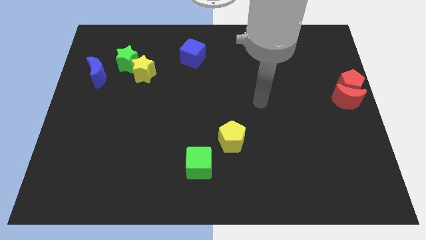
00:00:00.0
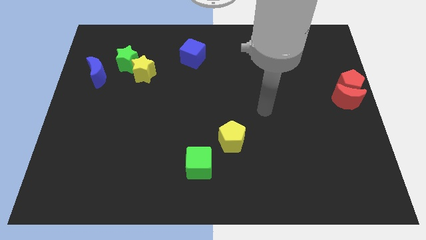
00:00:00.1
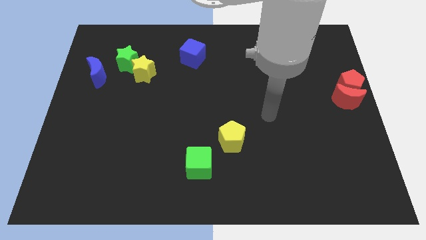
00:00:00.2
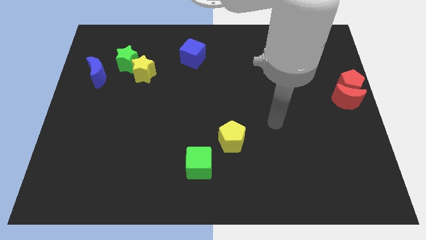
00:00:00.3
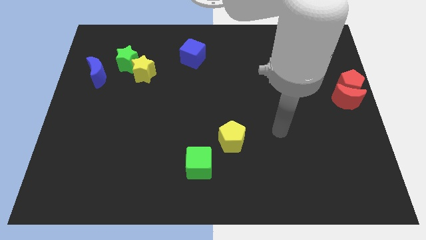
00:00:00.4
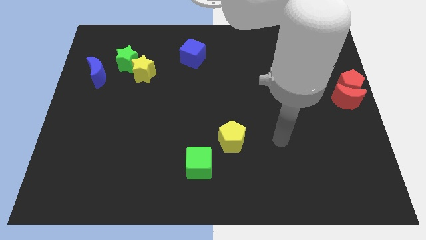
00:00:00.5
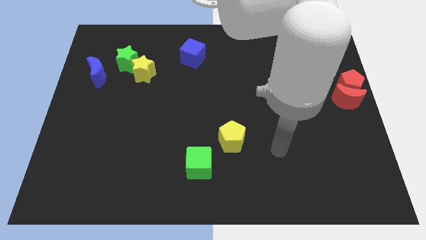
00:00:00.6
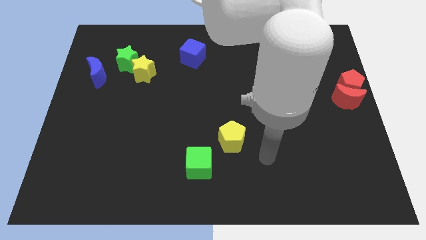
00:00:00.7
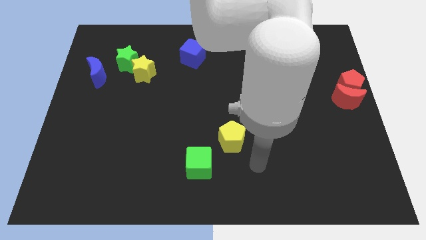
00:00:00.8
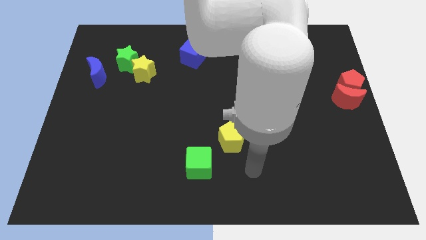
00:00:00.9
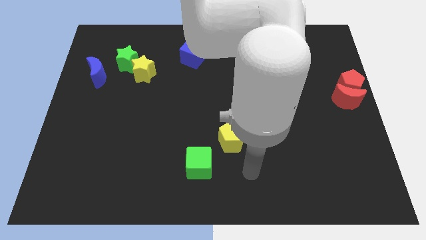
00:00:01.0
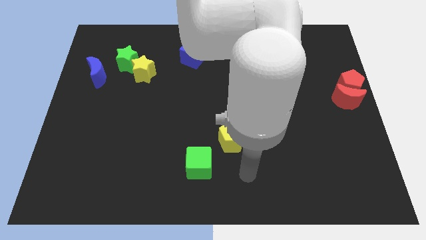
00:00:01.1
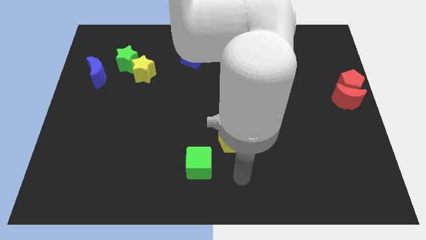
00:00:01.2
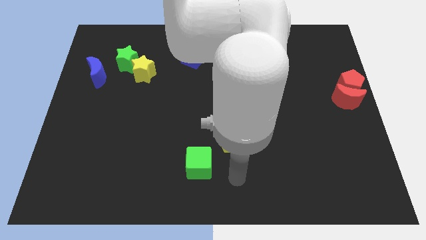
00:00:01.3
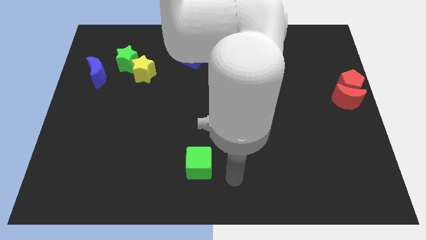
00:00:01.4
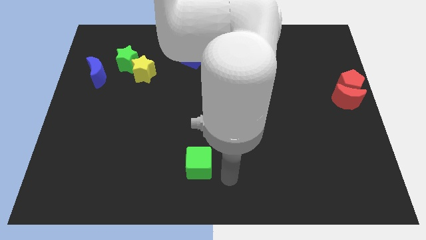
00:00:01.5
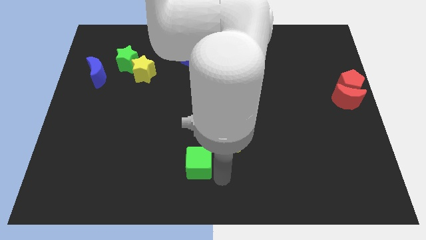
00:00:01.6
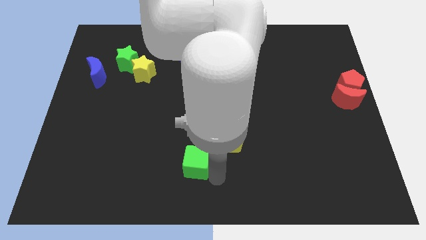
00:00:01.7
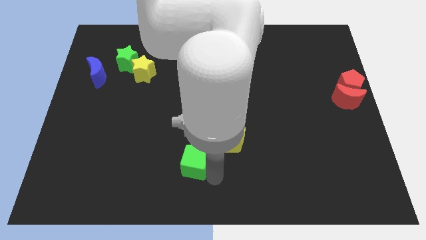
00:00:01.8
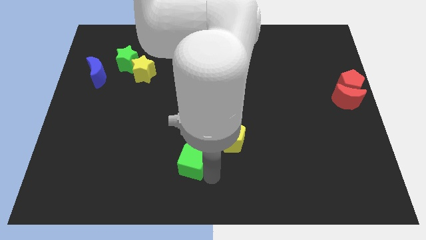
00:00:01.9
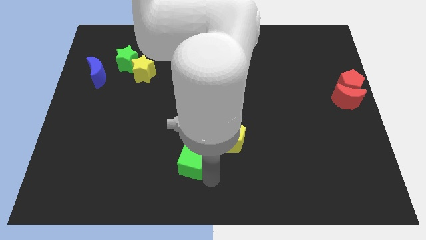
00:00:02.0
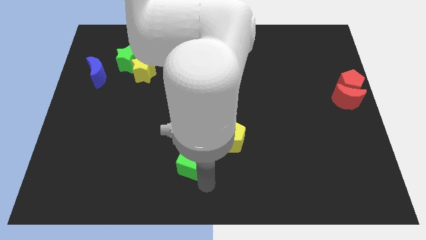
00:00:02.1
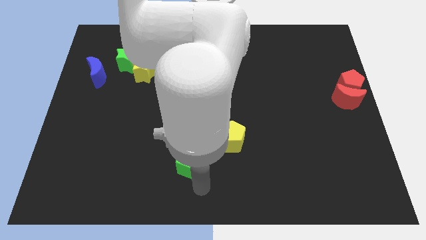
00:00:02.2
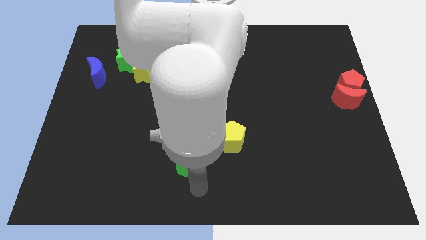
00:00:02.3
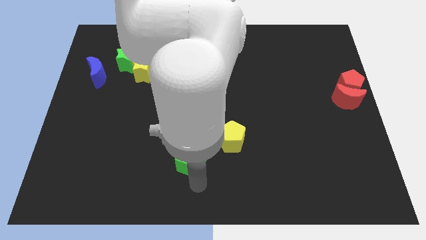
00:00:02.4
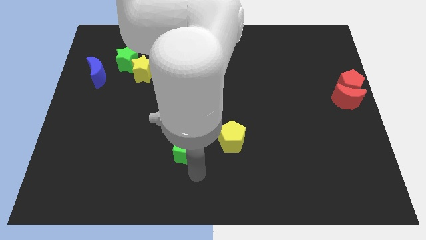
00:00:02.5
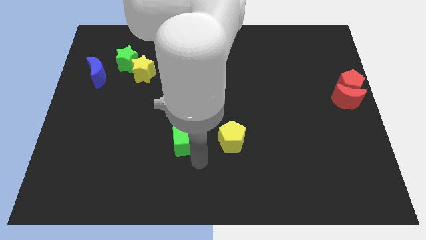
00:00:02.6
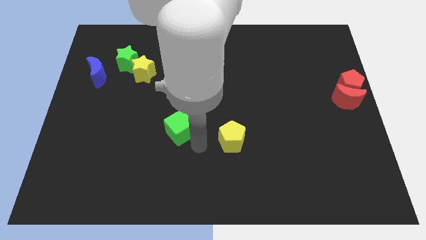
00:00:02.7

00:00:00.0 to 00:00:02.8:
point your arm at the bottom of the green cube

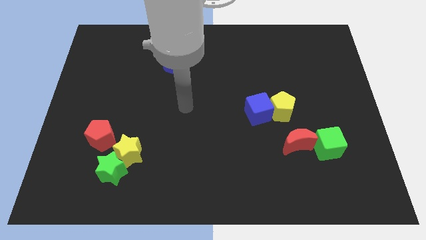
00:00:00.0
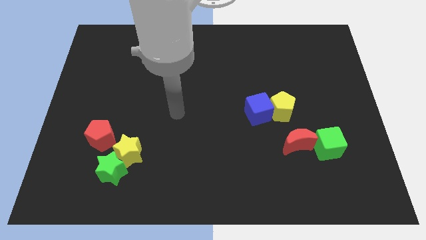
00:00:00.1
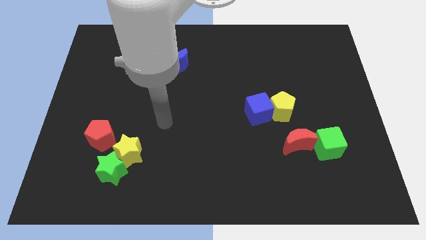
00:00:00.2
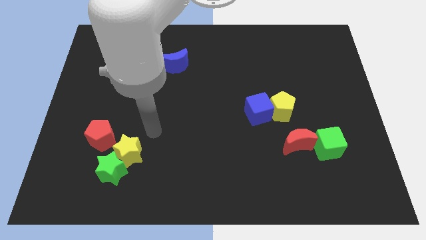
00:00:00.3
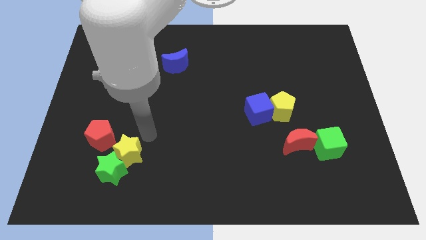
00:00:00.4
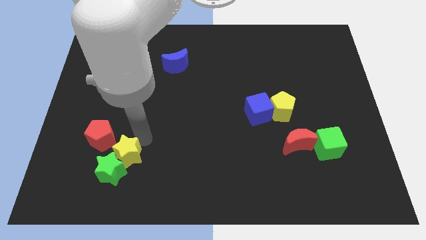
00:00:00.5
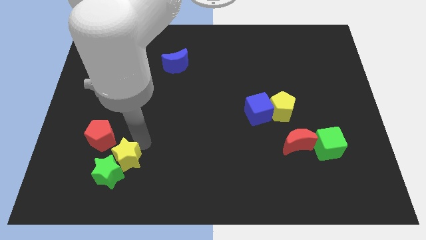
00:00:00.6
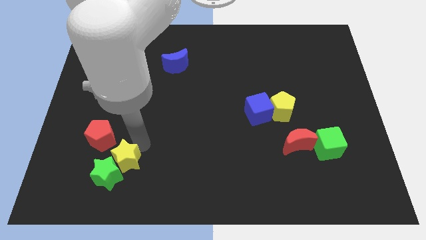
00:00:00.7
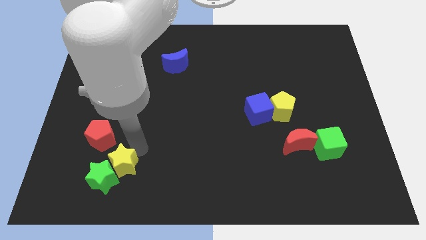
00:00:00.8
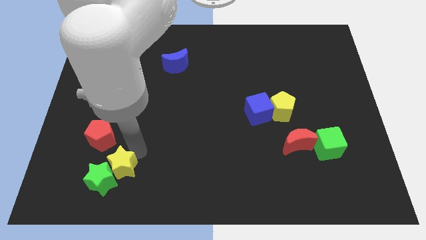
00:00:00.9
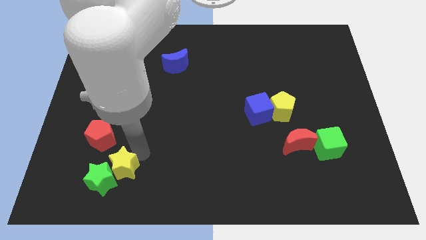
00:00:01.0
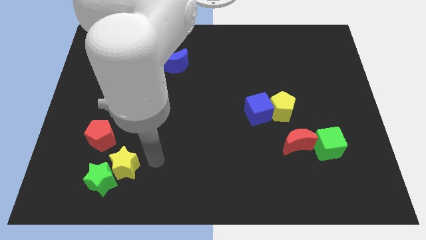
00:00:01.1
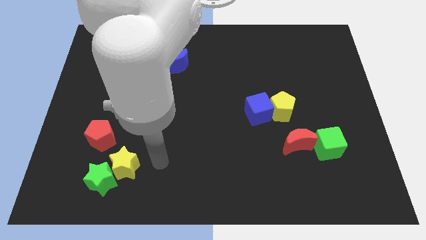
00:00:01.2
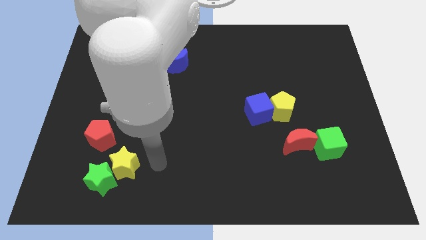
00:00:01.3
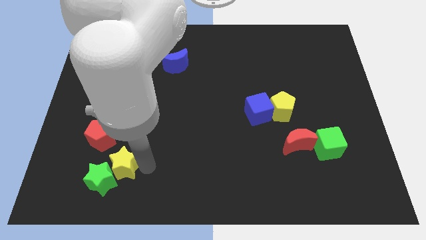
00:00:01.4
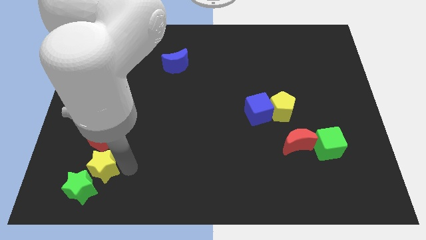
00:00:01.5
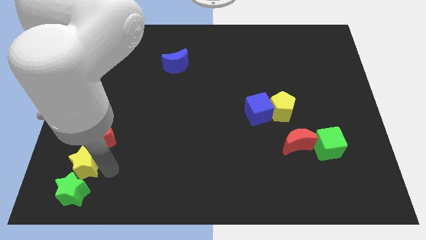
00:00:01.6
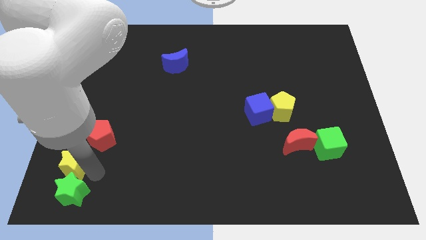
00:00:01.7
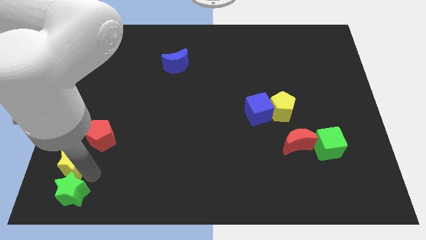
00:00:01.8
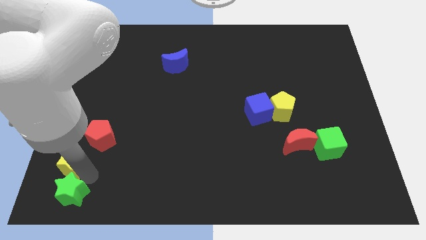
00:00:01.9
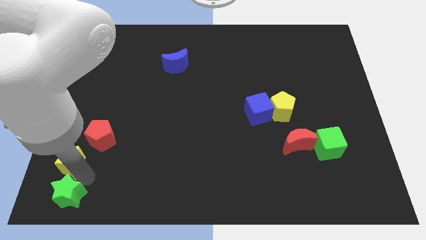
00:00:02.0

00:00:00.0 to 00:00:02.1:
push yellow star towards bottom left of the board

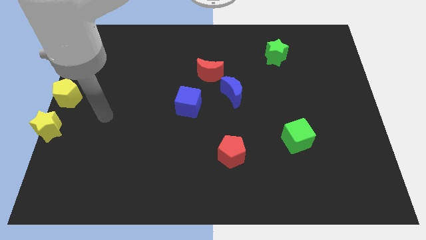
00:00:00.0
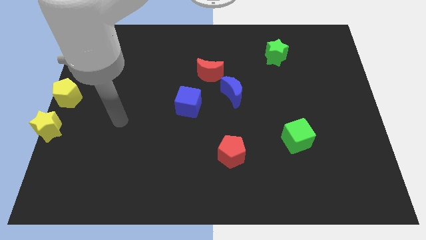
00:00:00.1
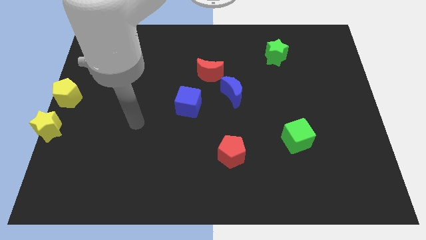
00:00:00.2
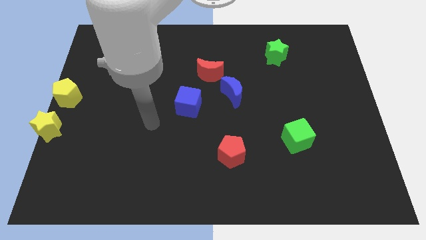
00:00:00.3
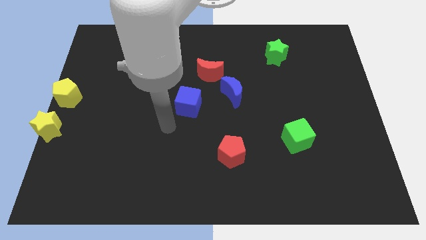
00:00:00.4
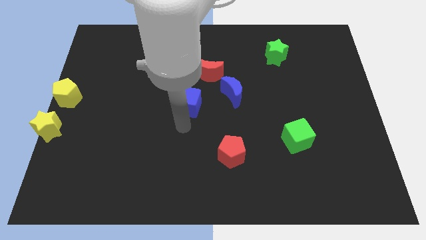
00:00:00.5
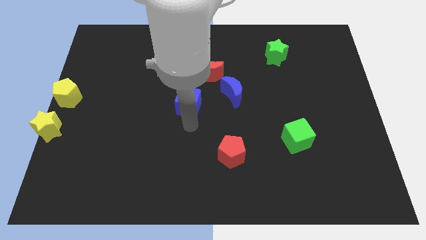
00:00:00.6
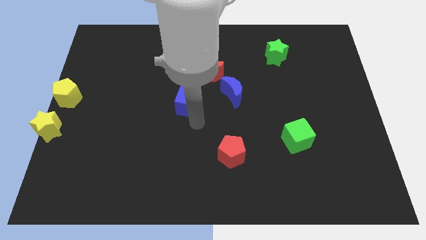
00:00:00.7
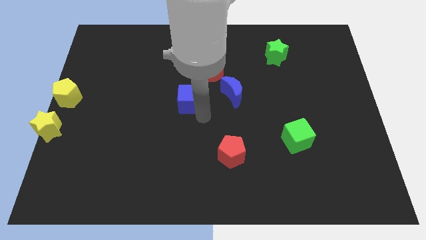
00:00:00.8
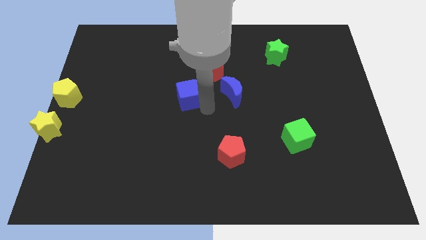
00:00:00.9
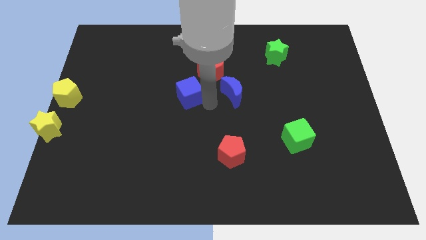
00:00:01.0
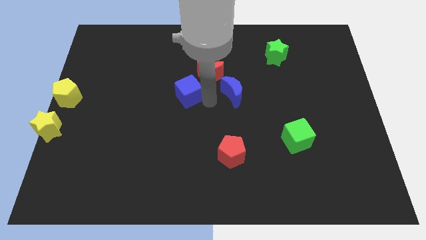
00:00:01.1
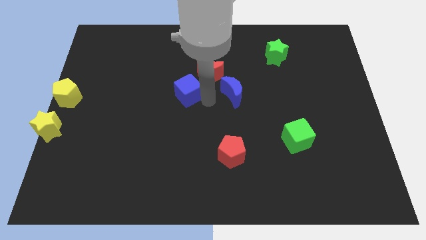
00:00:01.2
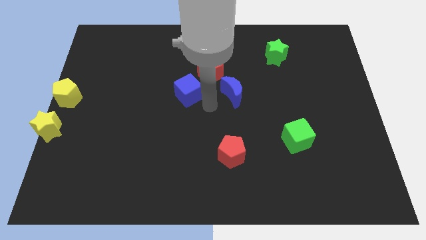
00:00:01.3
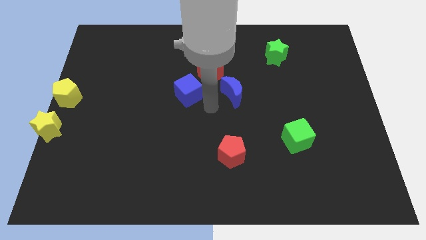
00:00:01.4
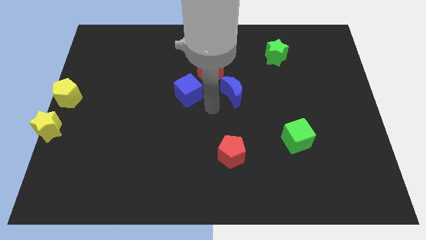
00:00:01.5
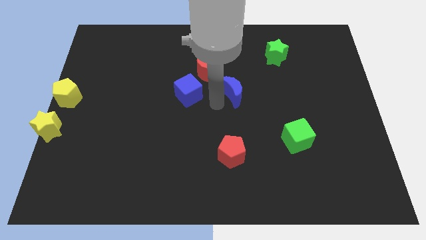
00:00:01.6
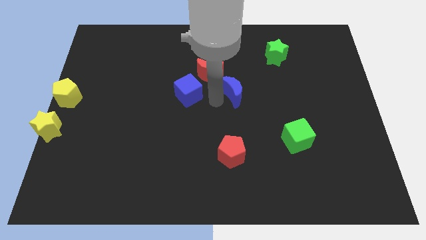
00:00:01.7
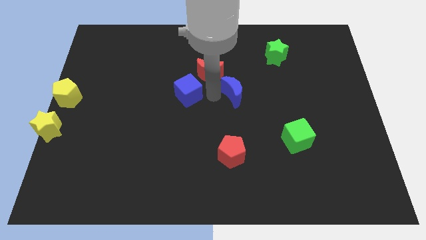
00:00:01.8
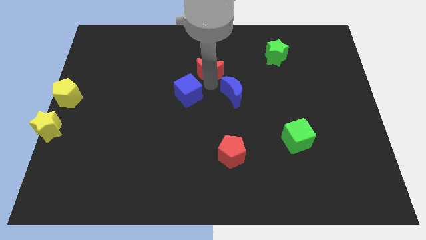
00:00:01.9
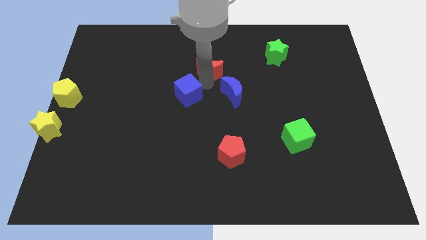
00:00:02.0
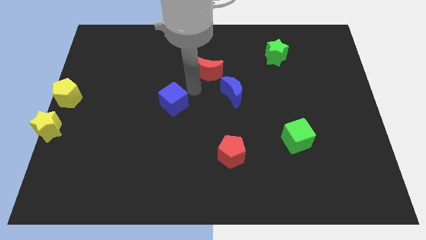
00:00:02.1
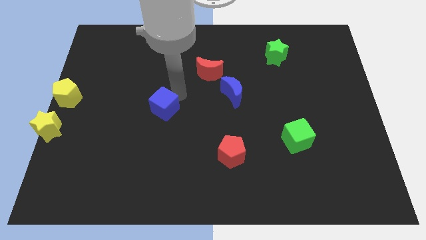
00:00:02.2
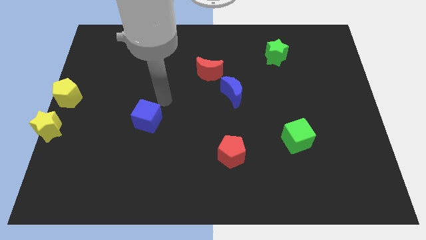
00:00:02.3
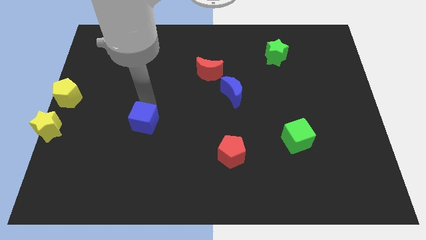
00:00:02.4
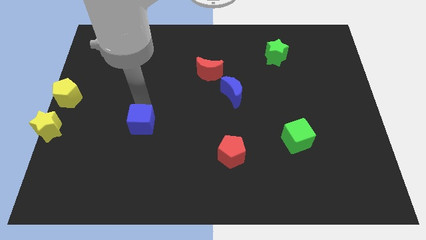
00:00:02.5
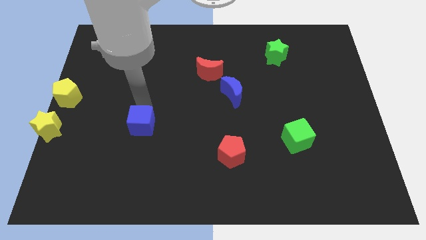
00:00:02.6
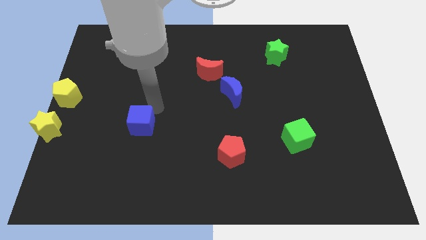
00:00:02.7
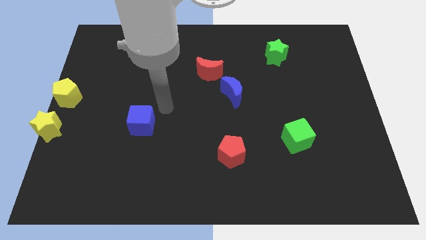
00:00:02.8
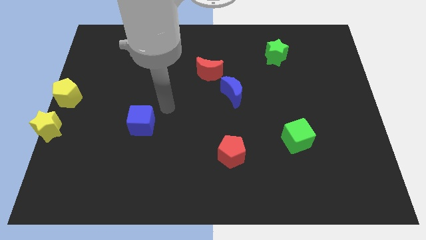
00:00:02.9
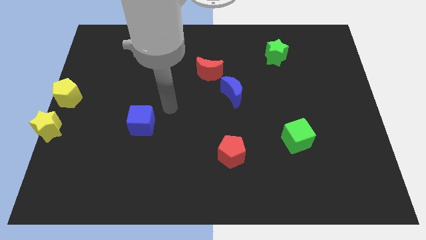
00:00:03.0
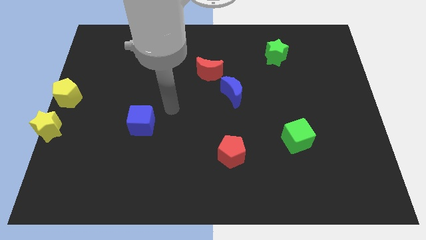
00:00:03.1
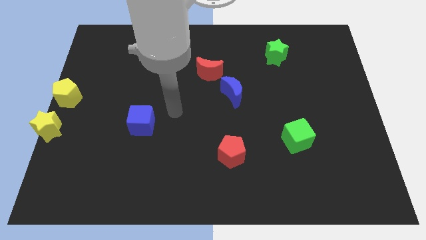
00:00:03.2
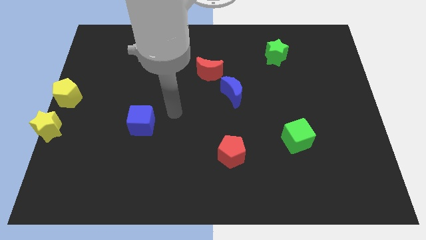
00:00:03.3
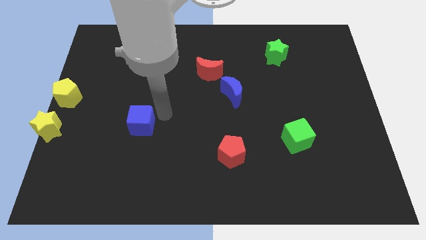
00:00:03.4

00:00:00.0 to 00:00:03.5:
move the blue cube to the horizontal right of the yellow star

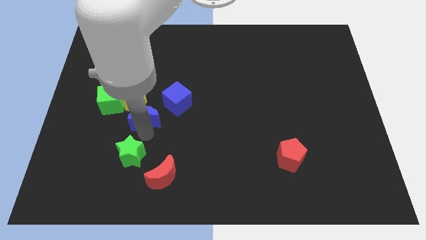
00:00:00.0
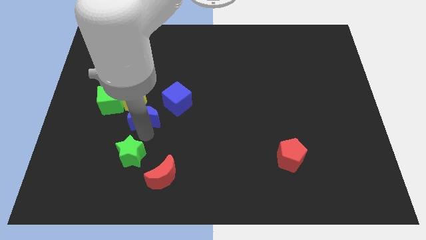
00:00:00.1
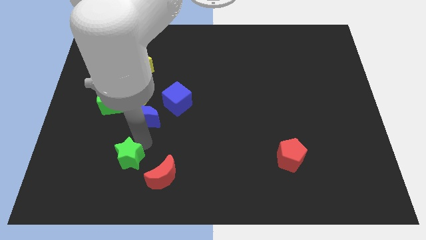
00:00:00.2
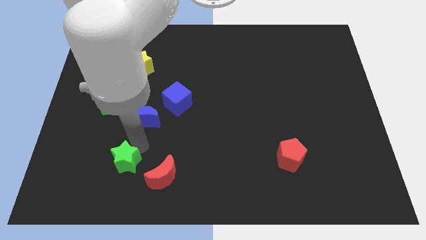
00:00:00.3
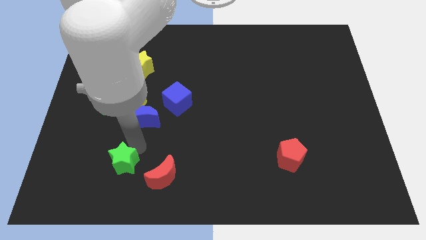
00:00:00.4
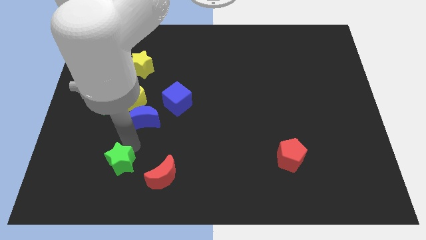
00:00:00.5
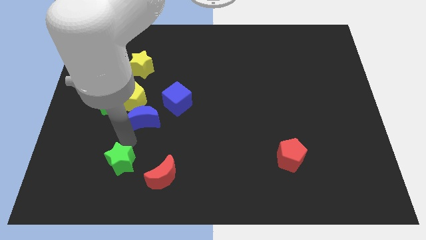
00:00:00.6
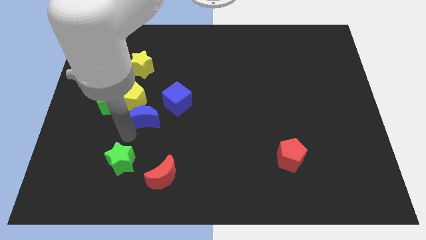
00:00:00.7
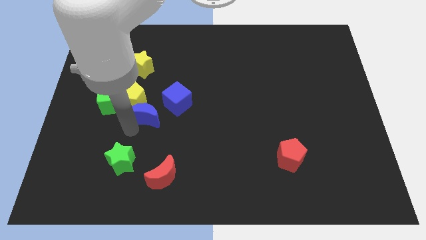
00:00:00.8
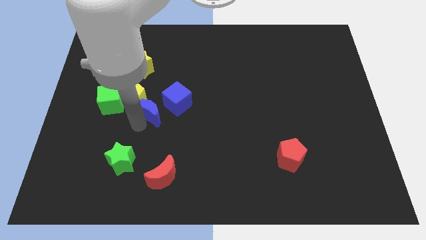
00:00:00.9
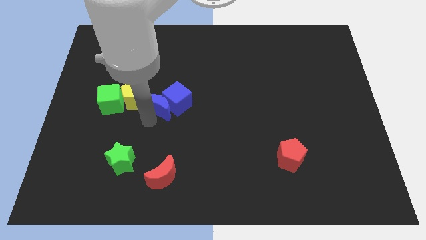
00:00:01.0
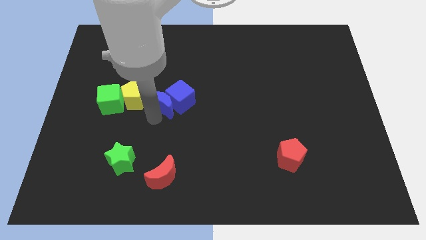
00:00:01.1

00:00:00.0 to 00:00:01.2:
push the blue moon into the blue cube
